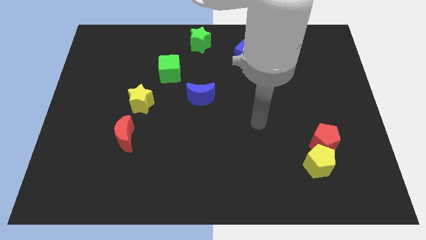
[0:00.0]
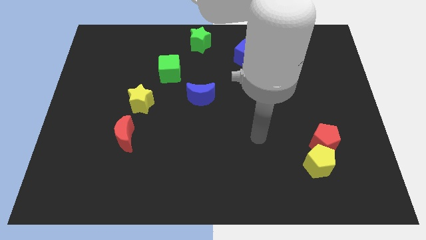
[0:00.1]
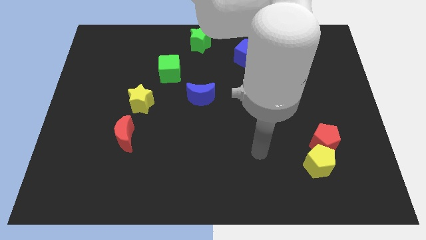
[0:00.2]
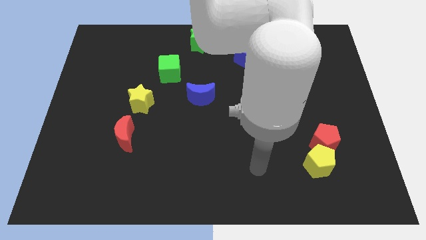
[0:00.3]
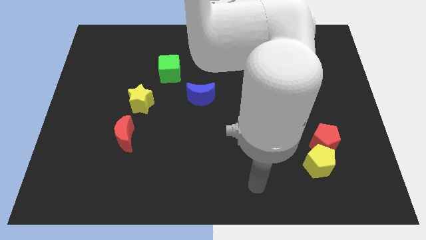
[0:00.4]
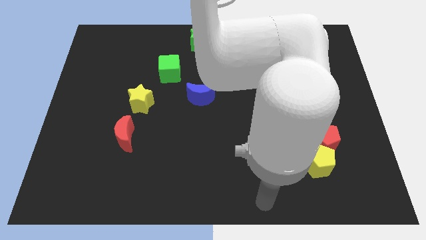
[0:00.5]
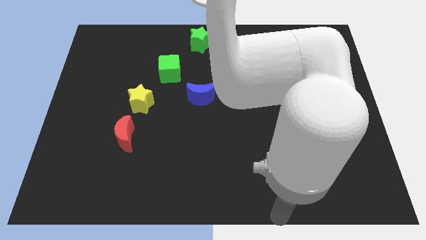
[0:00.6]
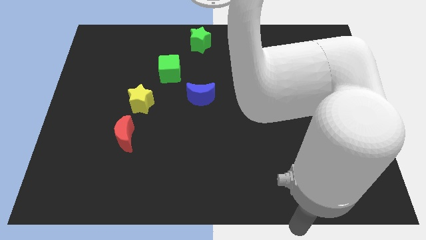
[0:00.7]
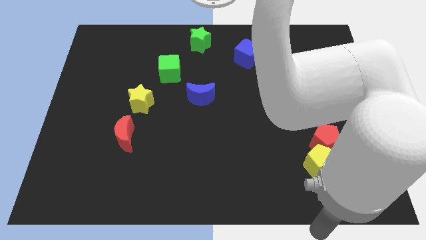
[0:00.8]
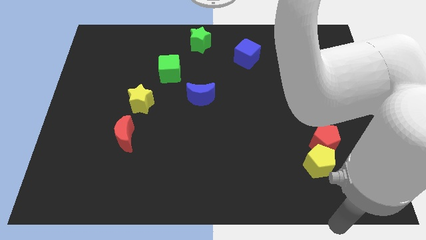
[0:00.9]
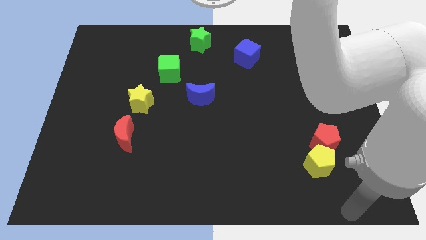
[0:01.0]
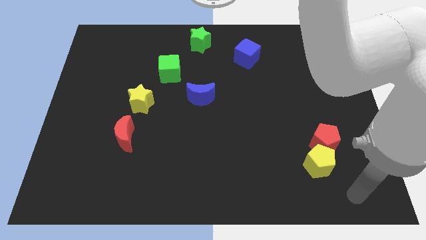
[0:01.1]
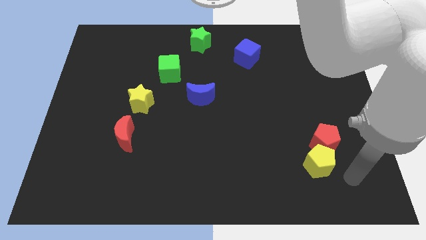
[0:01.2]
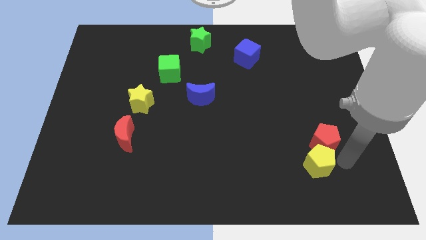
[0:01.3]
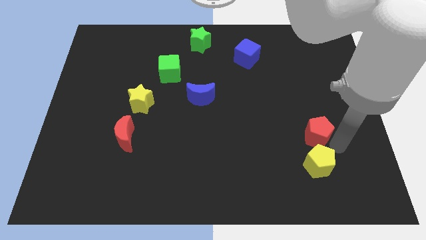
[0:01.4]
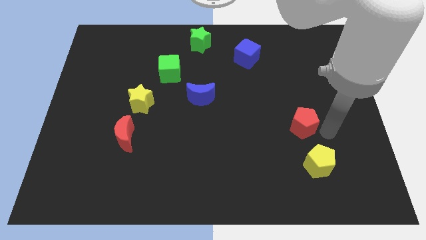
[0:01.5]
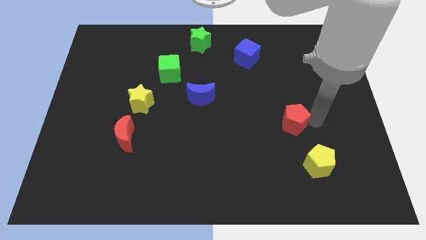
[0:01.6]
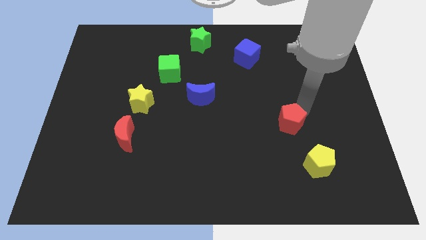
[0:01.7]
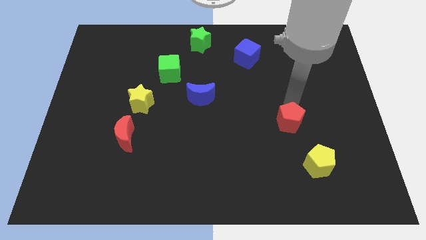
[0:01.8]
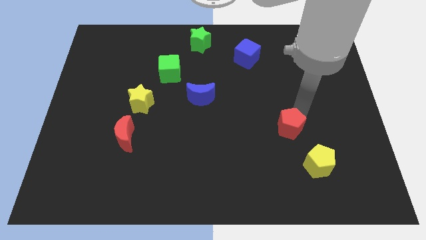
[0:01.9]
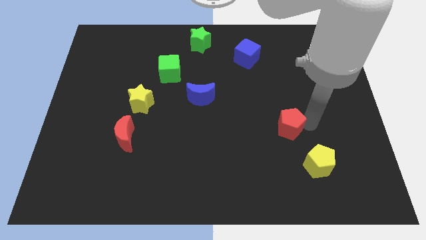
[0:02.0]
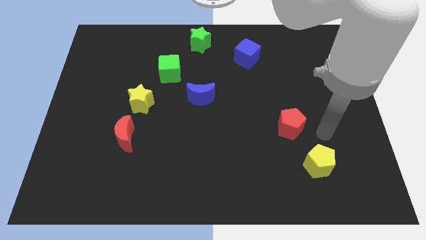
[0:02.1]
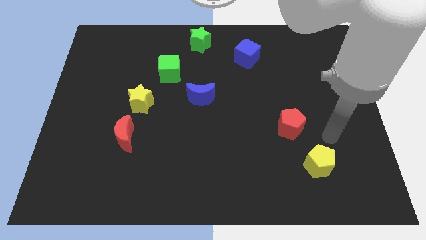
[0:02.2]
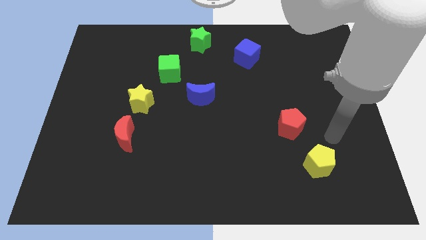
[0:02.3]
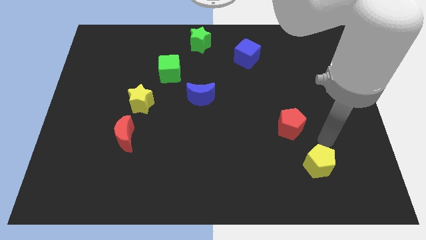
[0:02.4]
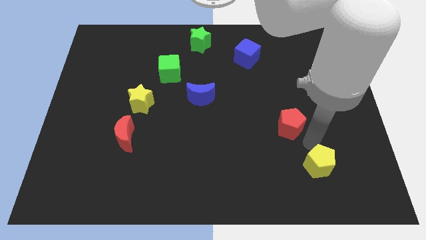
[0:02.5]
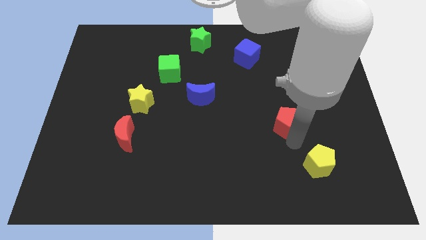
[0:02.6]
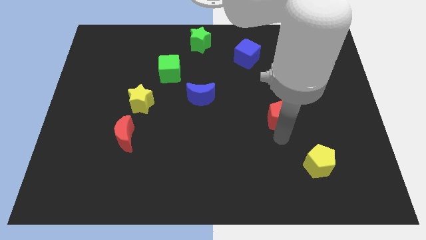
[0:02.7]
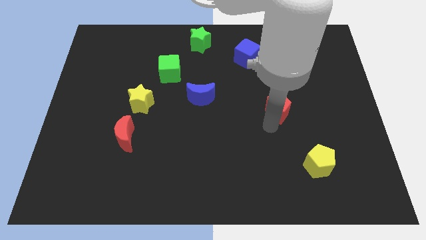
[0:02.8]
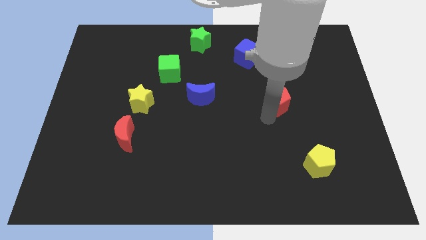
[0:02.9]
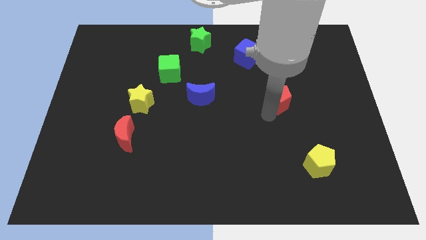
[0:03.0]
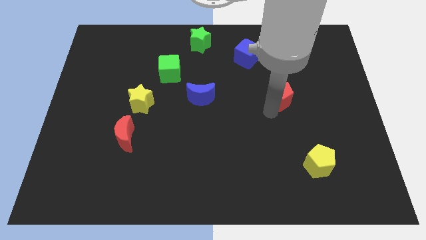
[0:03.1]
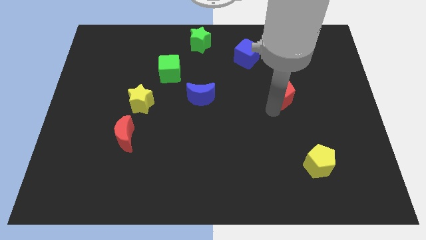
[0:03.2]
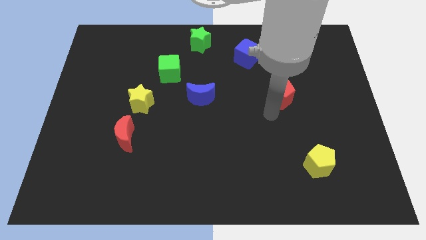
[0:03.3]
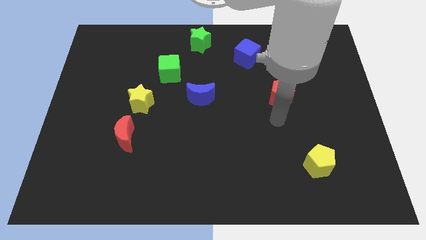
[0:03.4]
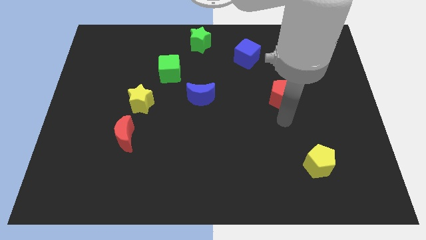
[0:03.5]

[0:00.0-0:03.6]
move the red pentagon parallel to the blue cube

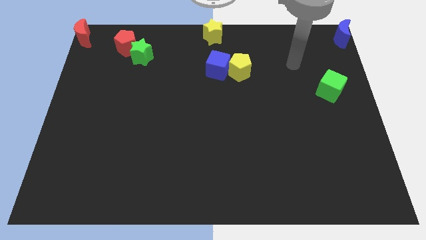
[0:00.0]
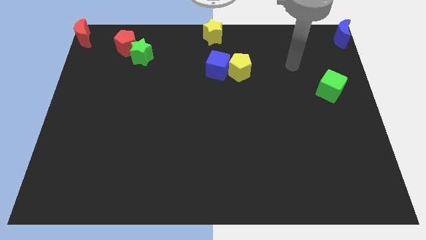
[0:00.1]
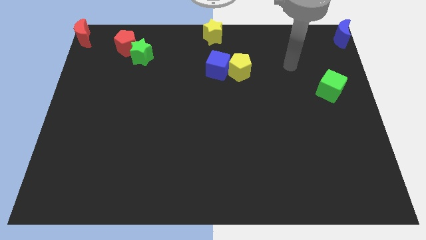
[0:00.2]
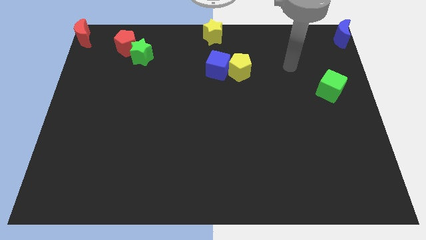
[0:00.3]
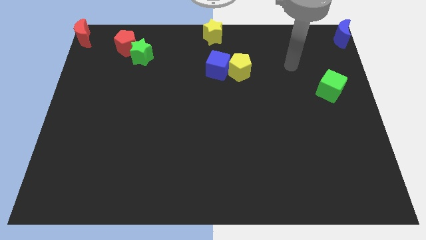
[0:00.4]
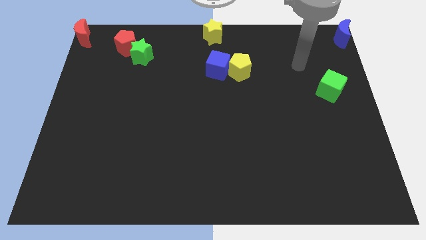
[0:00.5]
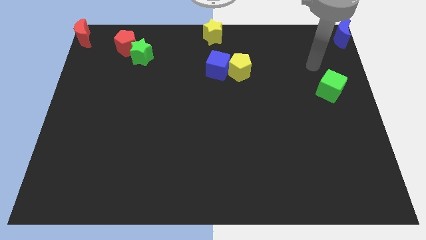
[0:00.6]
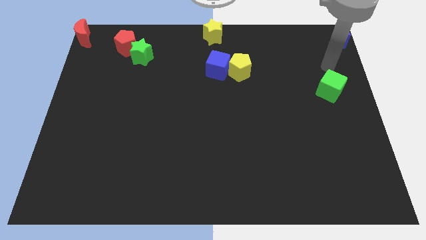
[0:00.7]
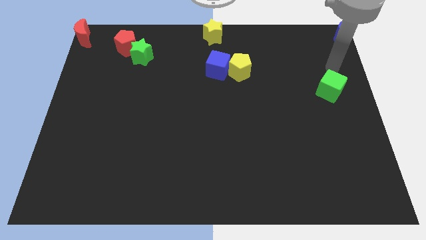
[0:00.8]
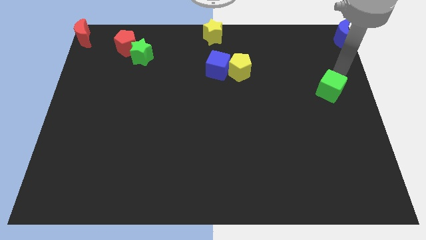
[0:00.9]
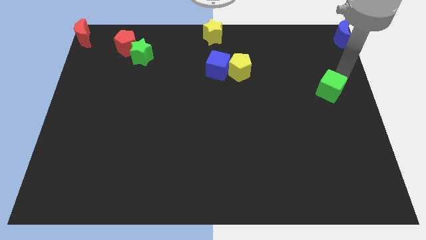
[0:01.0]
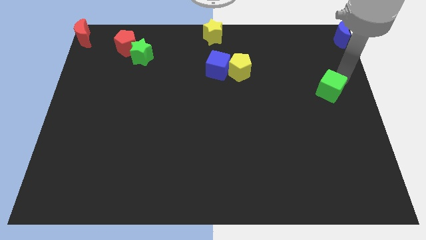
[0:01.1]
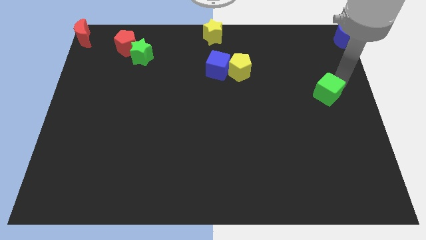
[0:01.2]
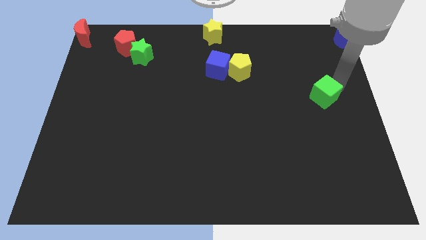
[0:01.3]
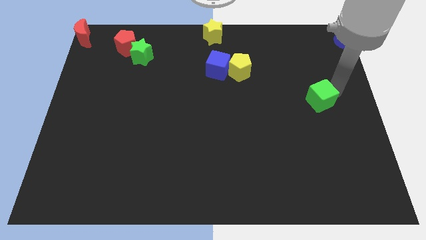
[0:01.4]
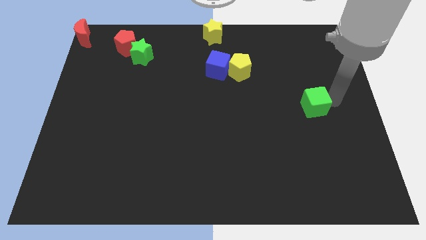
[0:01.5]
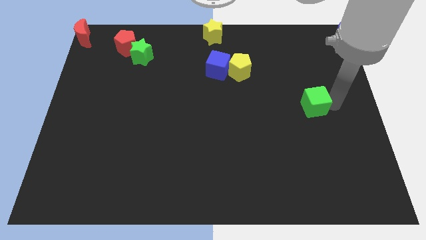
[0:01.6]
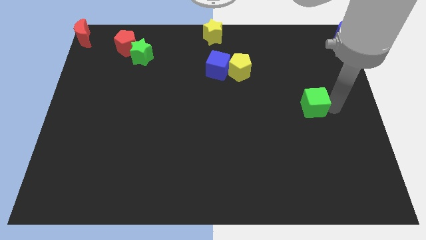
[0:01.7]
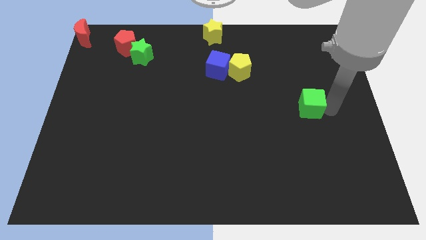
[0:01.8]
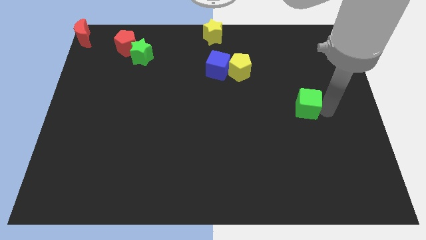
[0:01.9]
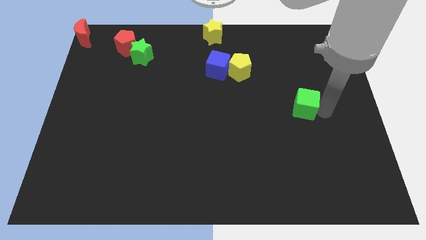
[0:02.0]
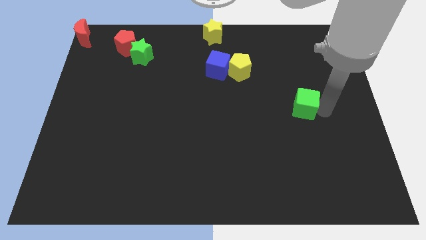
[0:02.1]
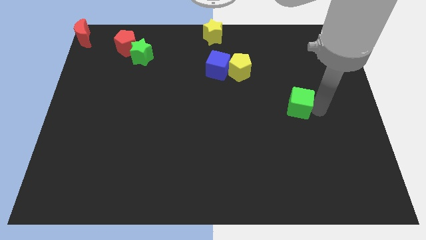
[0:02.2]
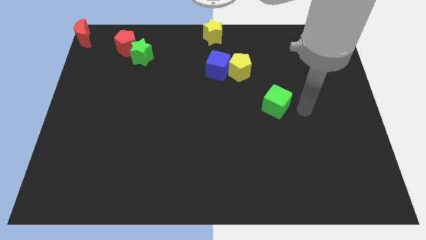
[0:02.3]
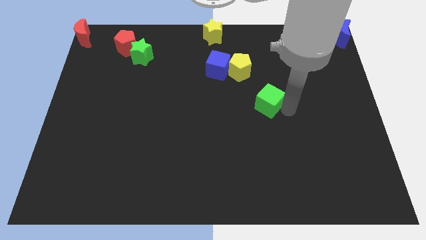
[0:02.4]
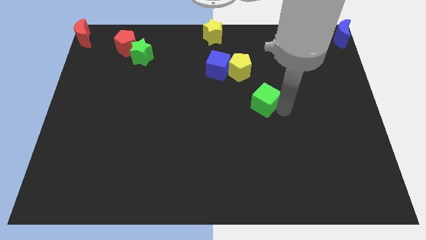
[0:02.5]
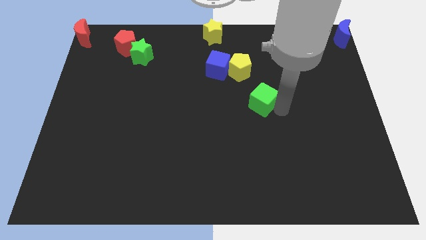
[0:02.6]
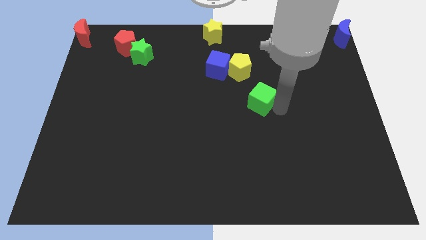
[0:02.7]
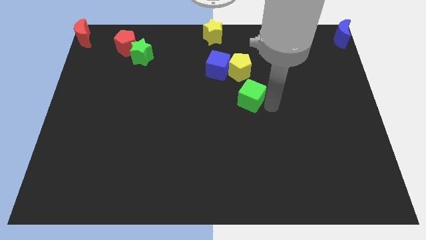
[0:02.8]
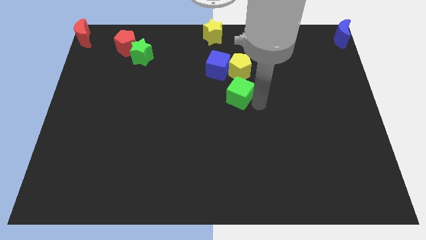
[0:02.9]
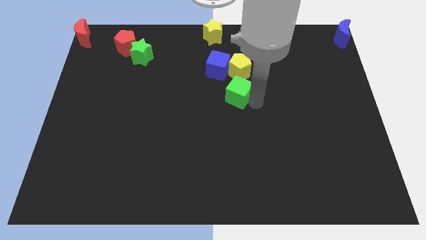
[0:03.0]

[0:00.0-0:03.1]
slide green cube below yellow pentagon

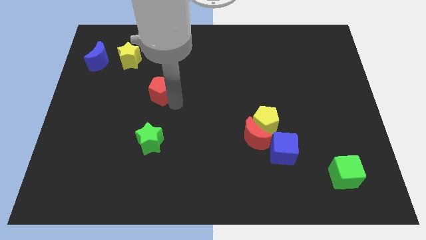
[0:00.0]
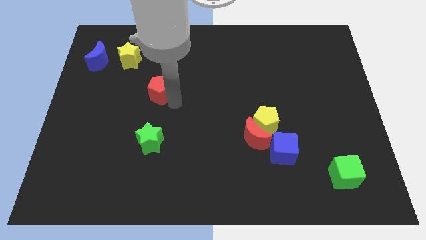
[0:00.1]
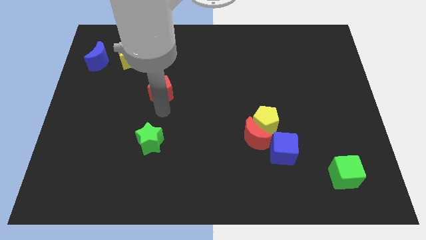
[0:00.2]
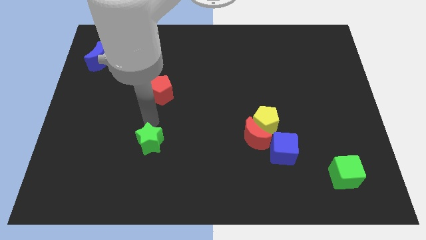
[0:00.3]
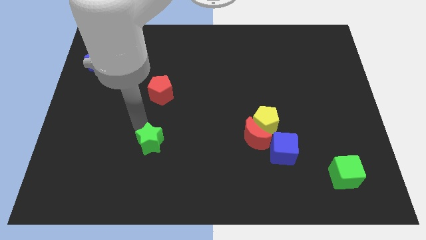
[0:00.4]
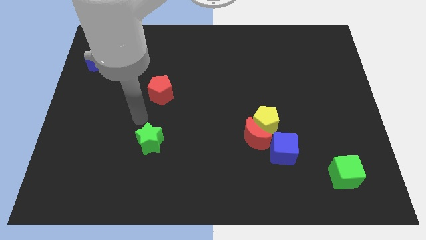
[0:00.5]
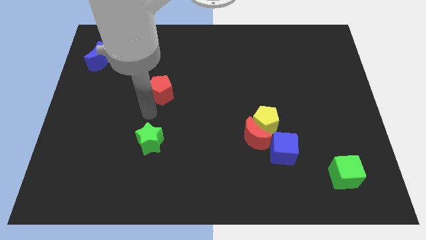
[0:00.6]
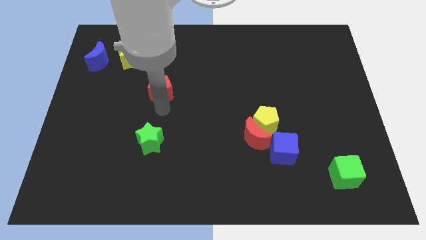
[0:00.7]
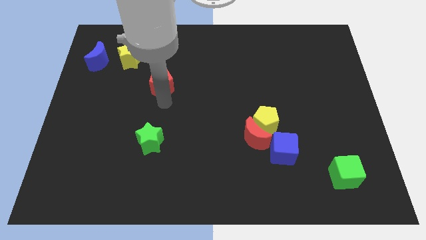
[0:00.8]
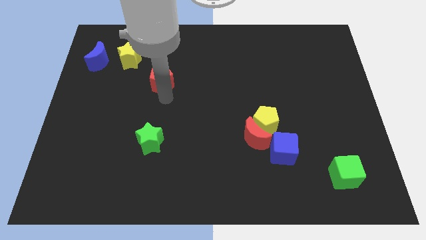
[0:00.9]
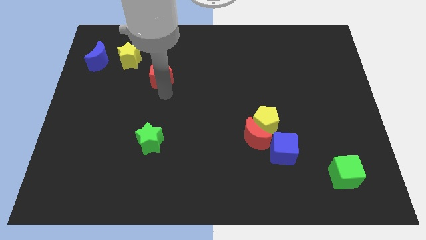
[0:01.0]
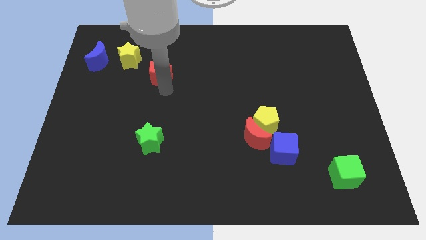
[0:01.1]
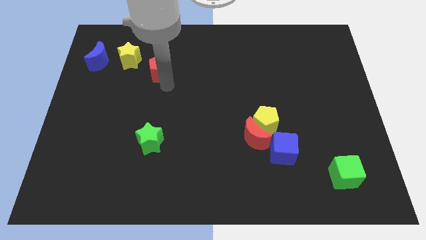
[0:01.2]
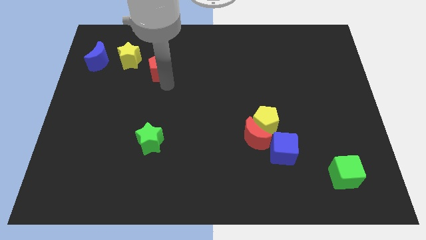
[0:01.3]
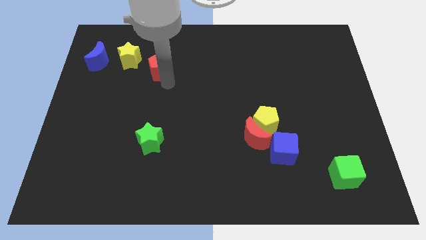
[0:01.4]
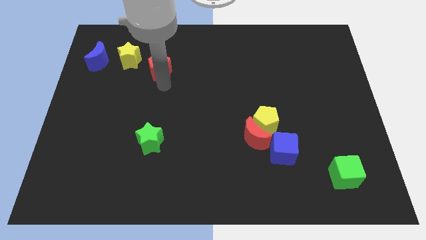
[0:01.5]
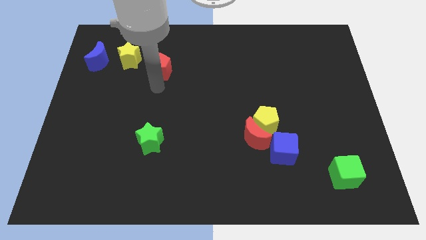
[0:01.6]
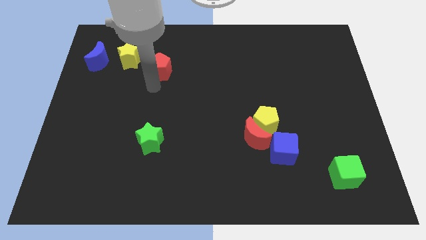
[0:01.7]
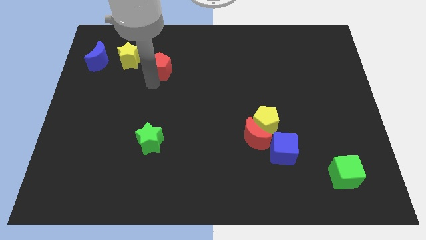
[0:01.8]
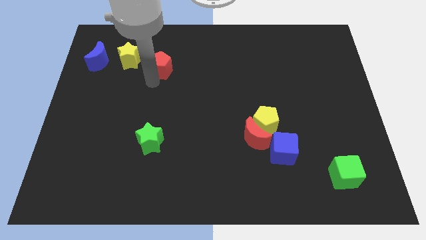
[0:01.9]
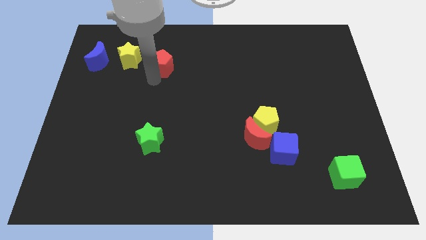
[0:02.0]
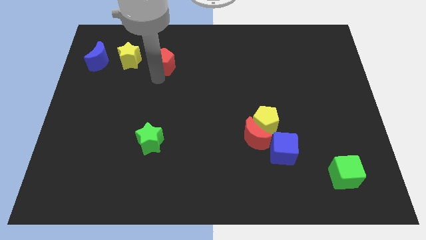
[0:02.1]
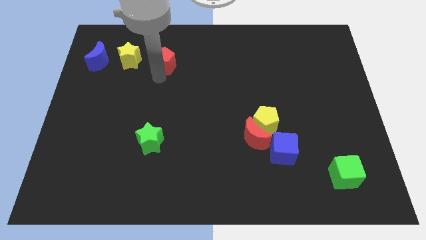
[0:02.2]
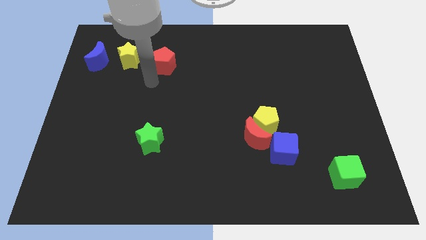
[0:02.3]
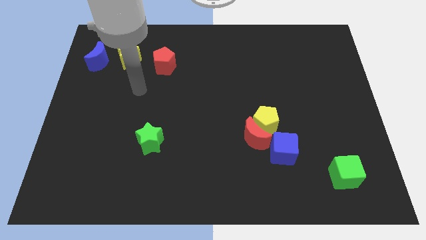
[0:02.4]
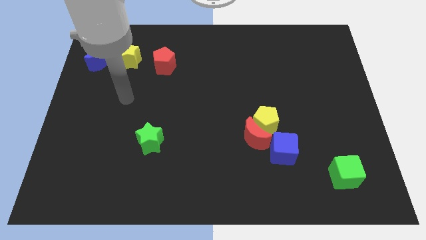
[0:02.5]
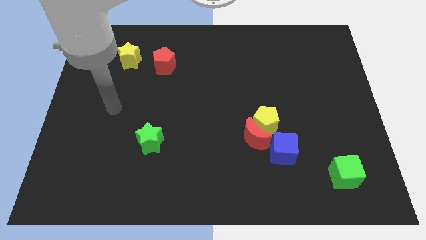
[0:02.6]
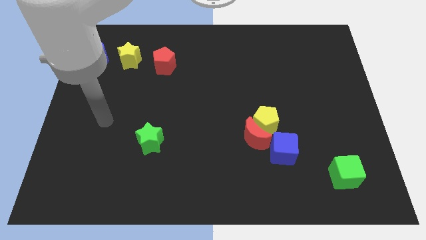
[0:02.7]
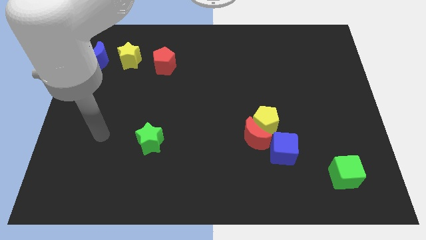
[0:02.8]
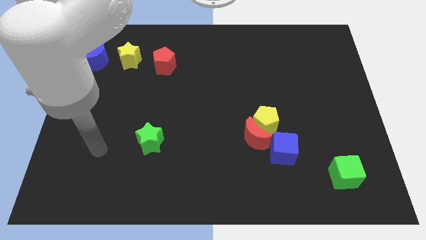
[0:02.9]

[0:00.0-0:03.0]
move red pentagon on right side of yellow star
